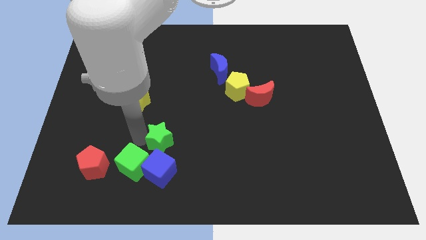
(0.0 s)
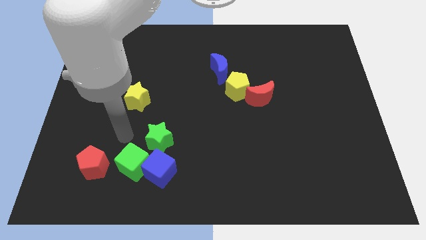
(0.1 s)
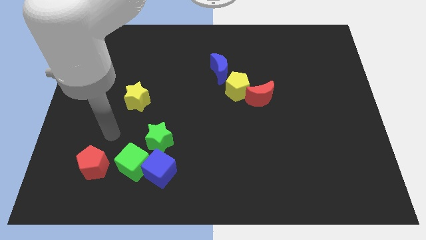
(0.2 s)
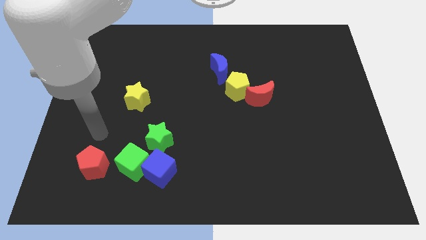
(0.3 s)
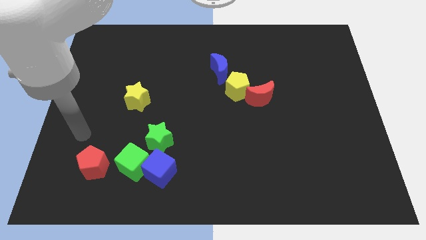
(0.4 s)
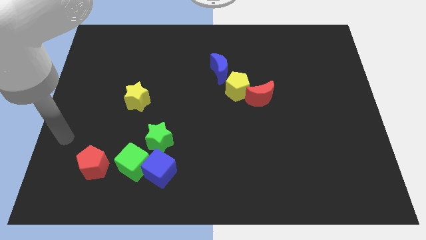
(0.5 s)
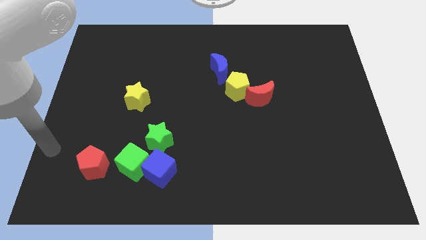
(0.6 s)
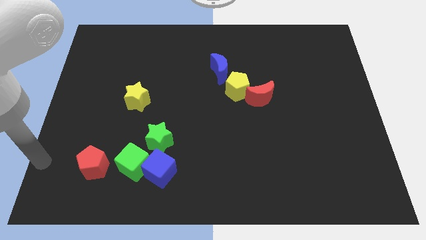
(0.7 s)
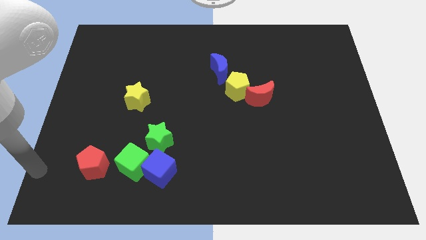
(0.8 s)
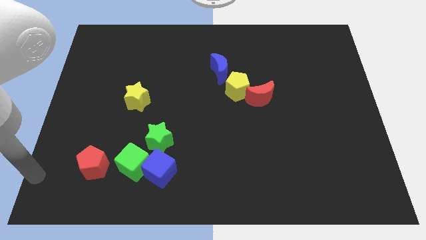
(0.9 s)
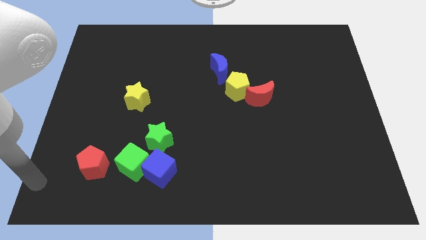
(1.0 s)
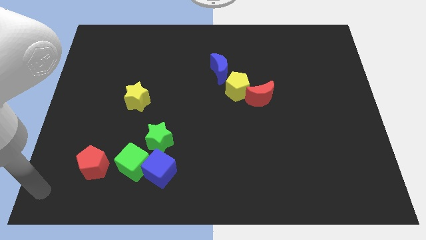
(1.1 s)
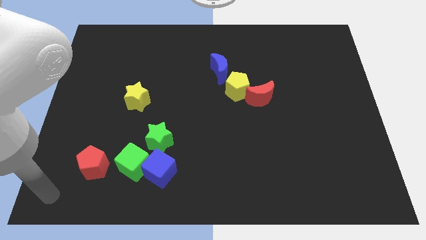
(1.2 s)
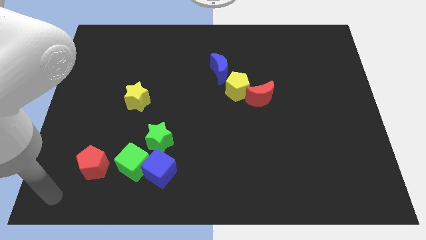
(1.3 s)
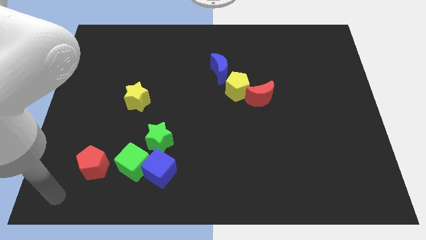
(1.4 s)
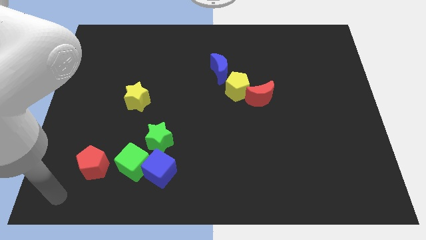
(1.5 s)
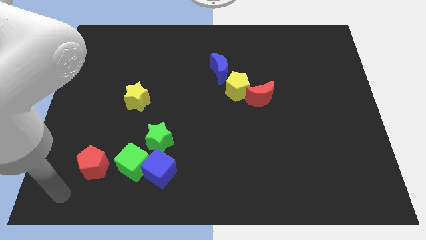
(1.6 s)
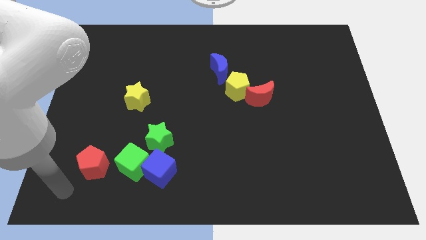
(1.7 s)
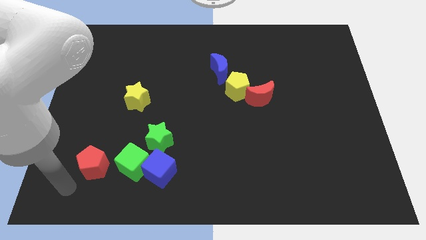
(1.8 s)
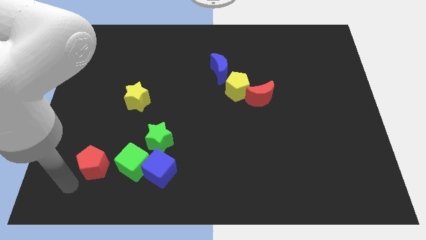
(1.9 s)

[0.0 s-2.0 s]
move your arm to the bottom left side of the red pentagon

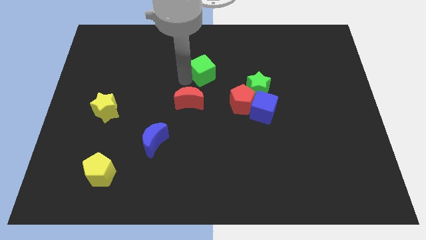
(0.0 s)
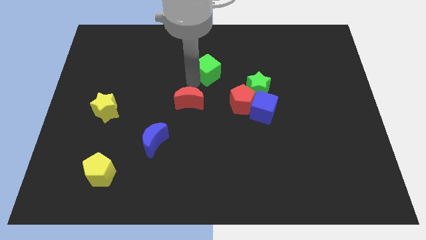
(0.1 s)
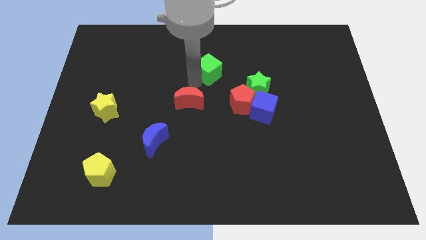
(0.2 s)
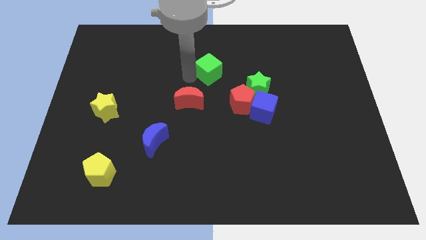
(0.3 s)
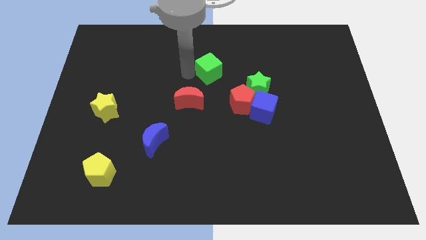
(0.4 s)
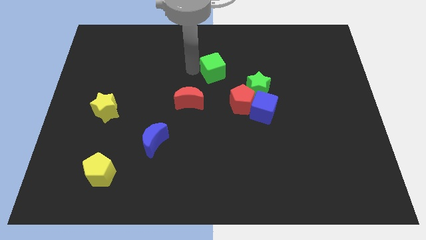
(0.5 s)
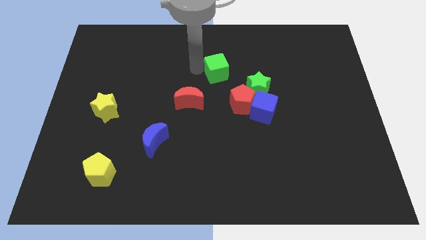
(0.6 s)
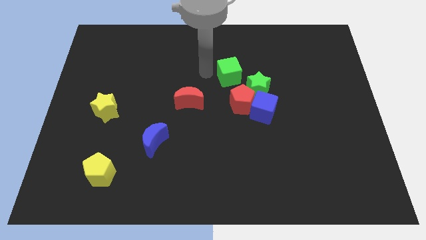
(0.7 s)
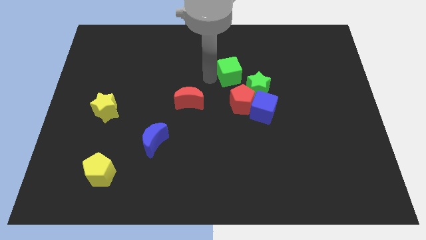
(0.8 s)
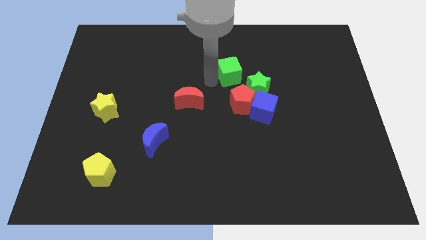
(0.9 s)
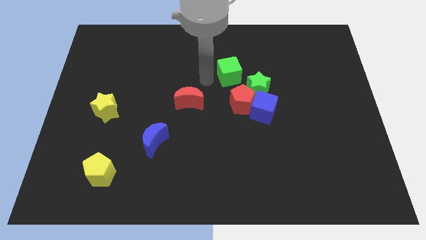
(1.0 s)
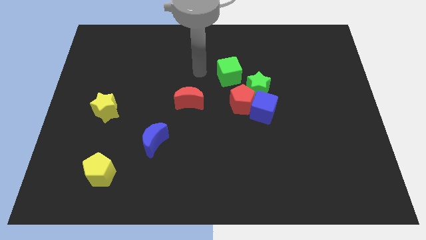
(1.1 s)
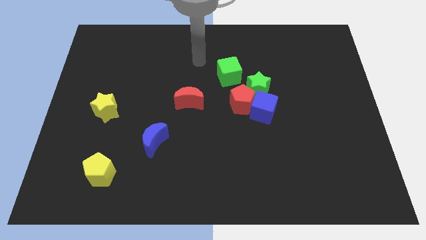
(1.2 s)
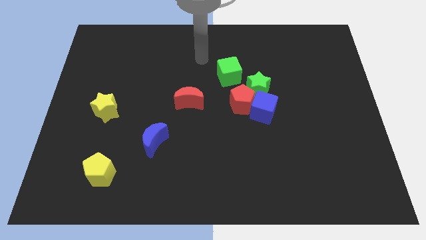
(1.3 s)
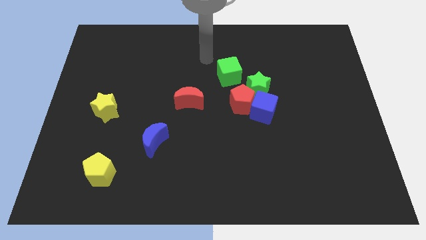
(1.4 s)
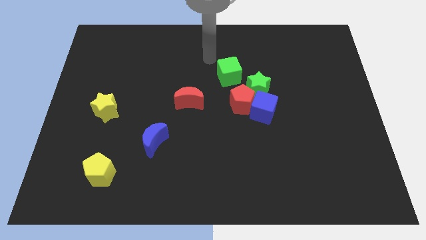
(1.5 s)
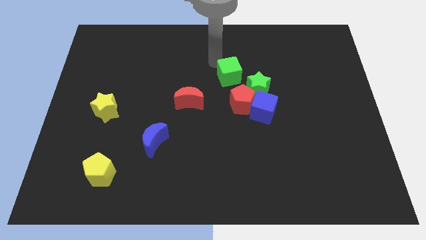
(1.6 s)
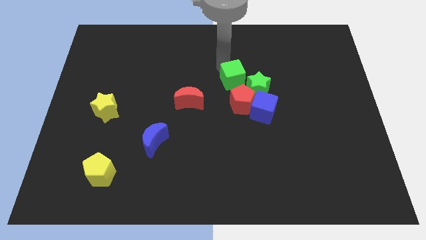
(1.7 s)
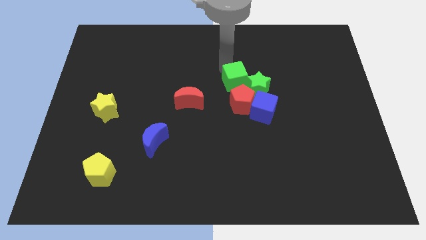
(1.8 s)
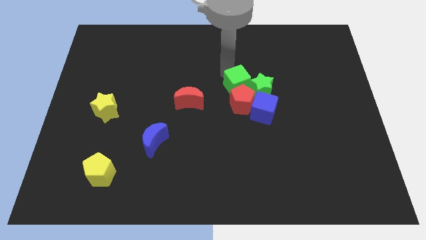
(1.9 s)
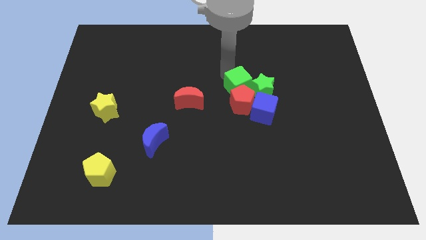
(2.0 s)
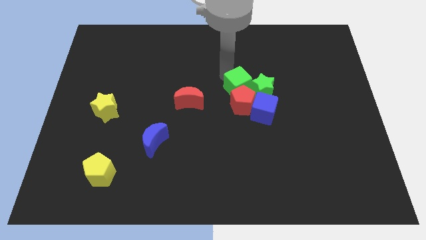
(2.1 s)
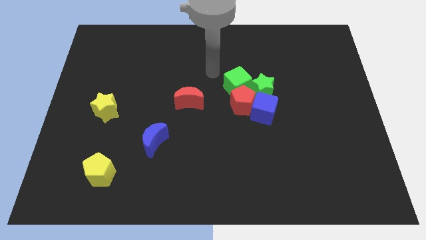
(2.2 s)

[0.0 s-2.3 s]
place the green cube into the green star and red pentagon

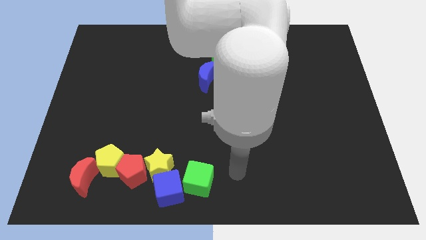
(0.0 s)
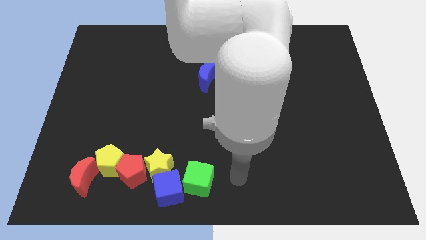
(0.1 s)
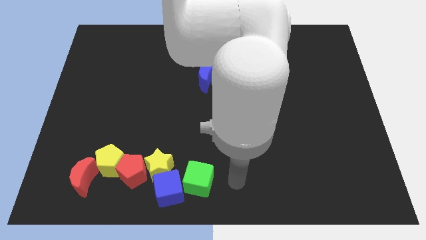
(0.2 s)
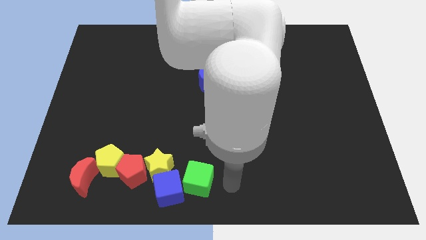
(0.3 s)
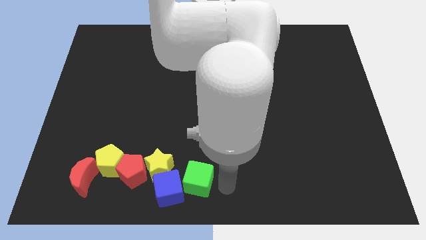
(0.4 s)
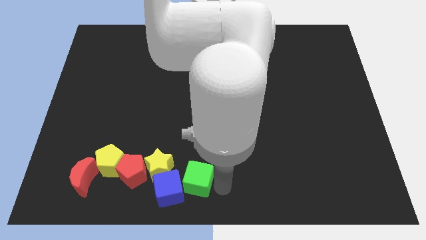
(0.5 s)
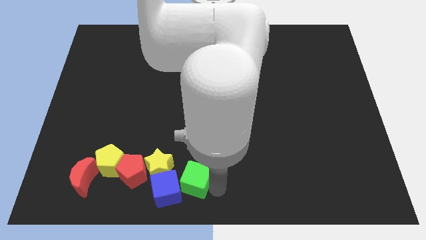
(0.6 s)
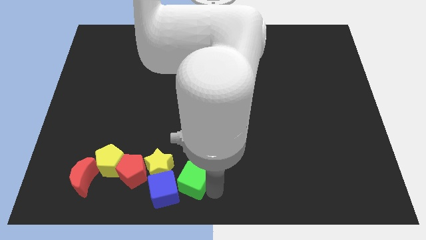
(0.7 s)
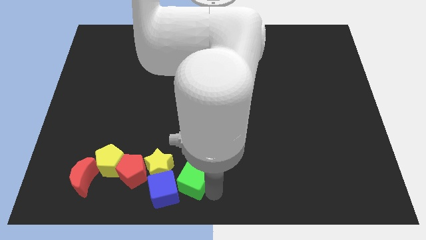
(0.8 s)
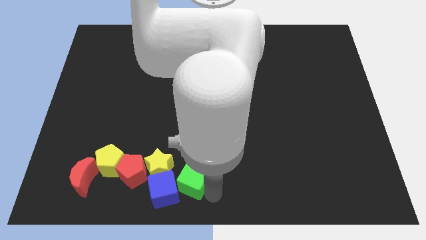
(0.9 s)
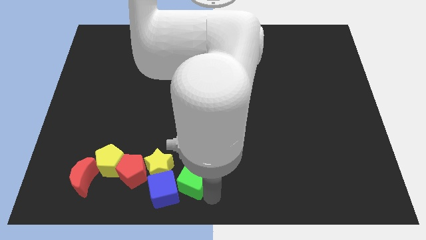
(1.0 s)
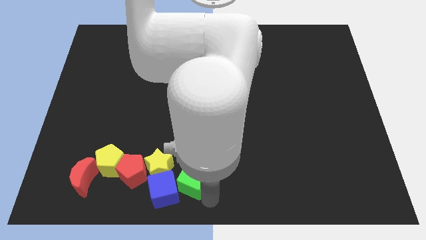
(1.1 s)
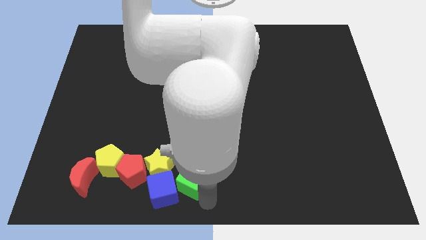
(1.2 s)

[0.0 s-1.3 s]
push green cube into blue cube

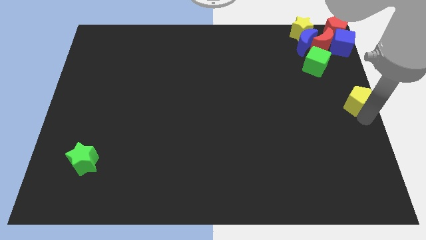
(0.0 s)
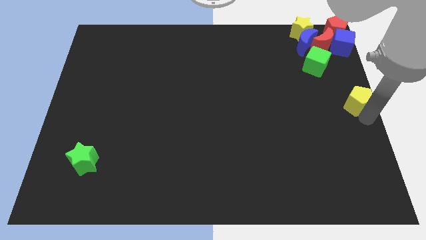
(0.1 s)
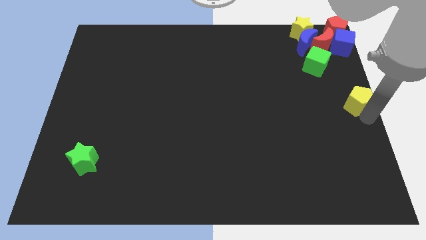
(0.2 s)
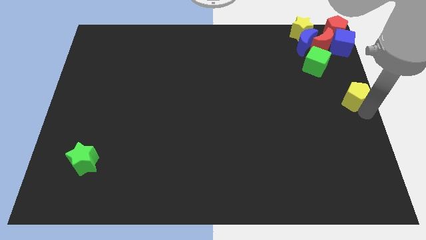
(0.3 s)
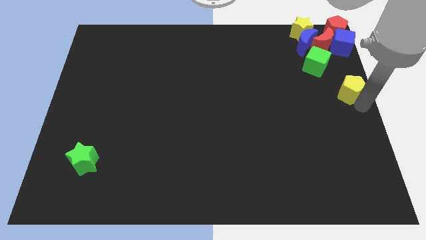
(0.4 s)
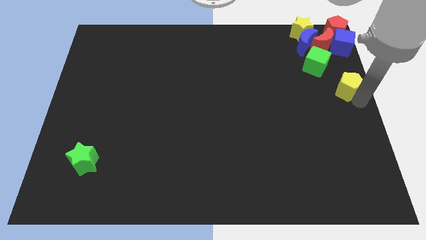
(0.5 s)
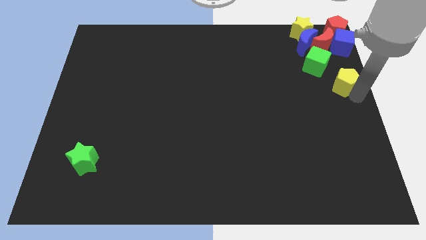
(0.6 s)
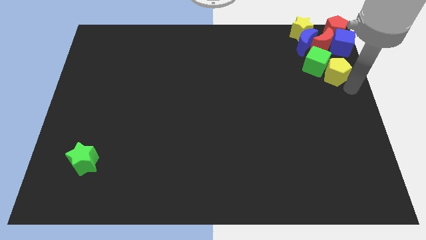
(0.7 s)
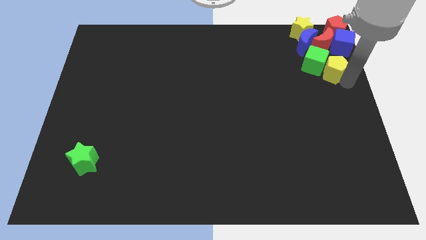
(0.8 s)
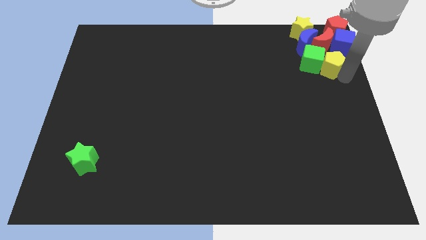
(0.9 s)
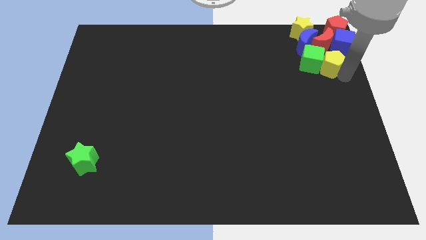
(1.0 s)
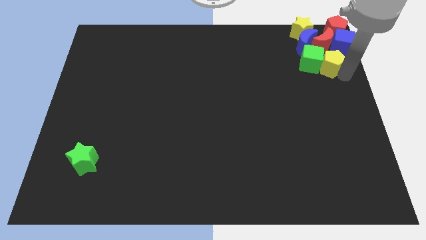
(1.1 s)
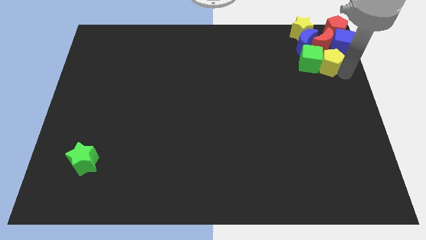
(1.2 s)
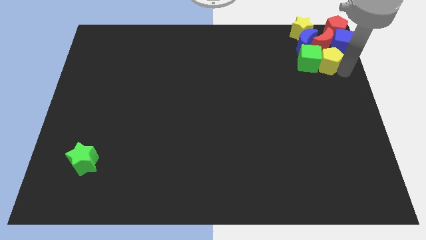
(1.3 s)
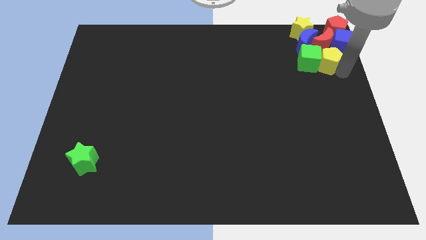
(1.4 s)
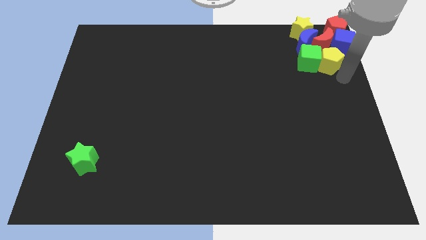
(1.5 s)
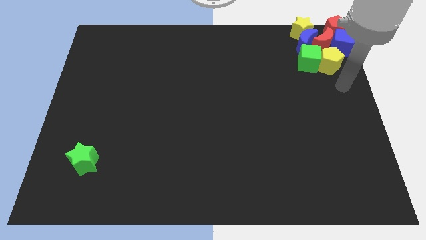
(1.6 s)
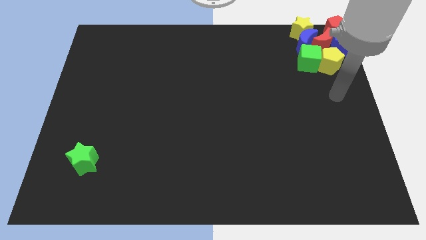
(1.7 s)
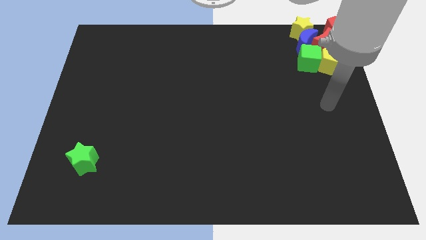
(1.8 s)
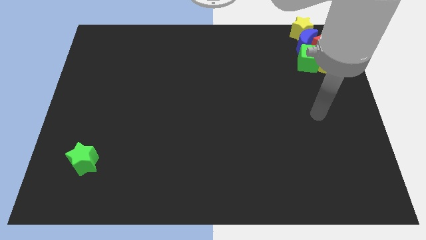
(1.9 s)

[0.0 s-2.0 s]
push the yellow pentagon into right of the green cube

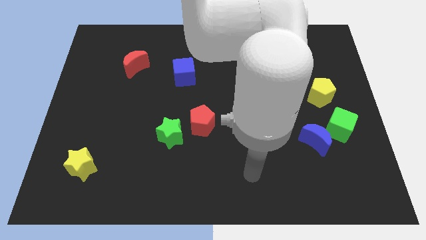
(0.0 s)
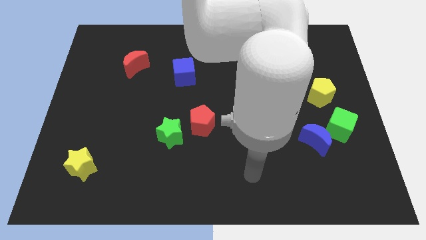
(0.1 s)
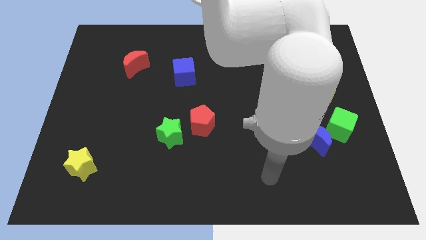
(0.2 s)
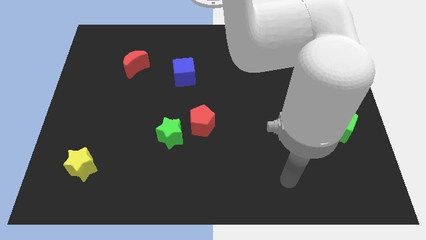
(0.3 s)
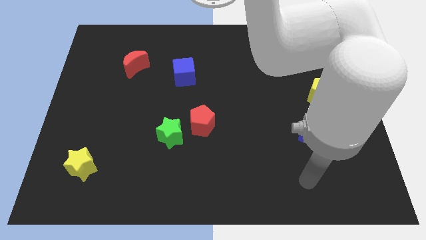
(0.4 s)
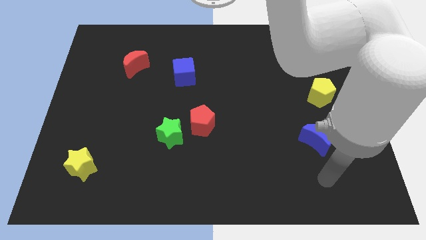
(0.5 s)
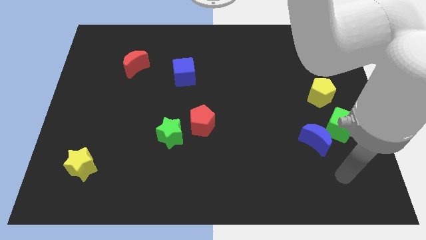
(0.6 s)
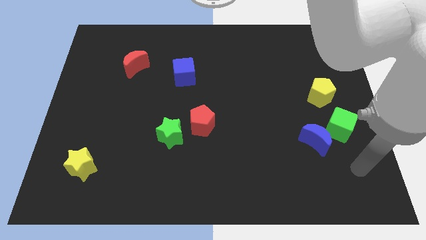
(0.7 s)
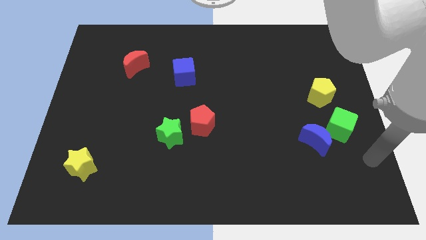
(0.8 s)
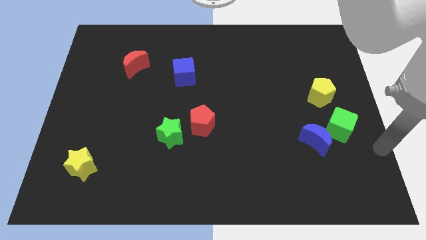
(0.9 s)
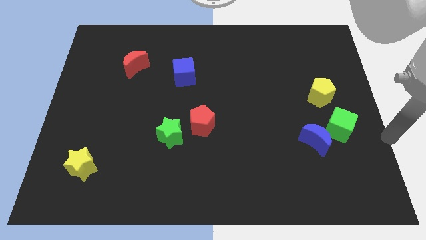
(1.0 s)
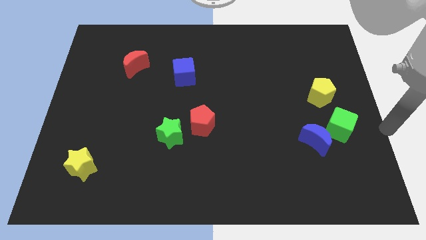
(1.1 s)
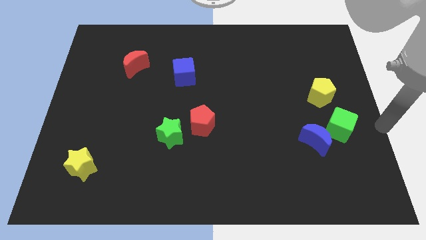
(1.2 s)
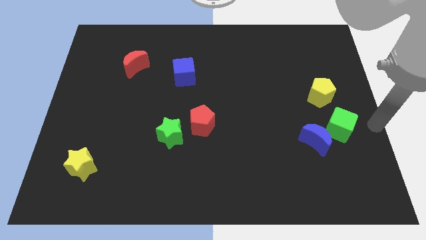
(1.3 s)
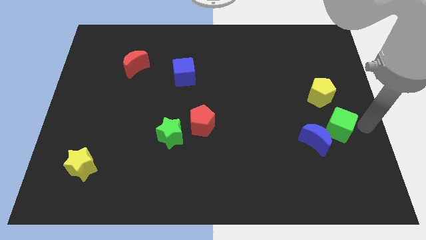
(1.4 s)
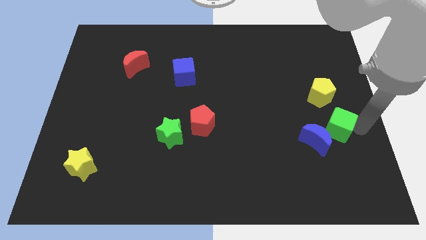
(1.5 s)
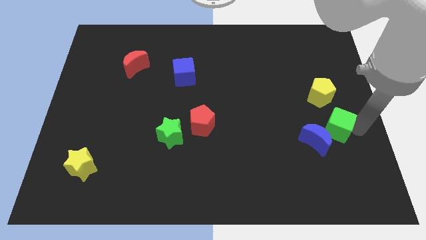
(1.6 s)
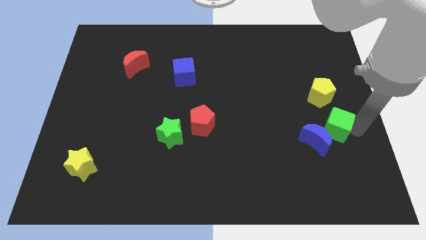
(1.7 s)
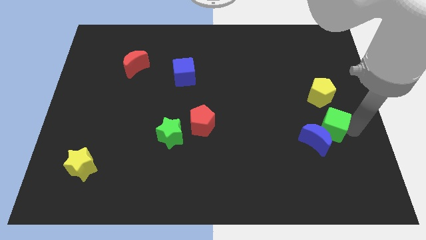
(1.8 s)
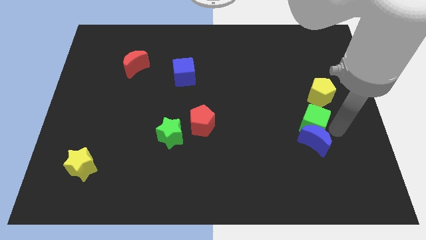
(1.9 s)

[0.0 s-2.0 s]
place the green cube between the blue moon and yellow pentagon
